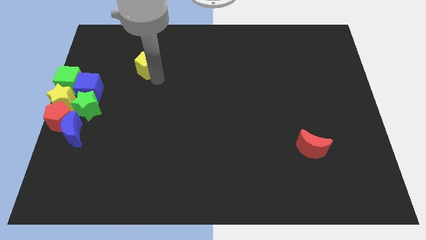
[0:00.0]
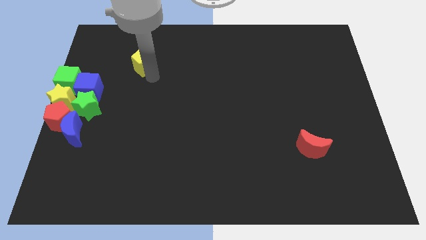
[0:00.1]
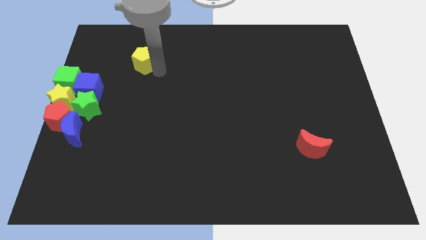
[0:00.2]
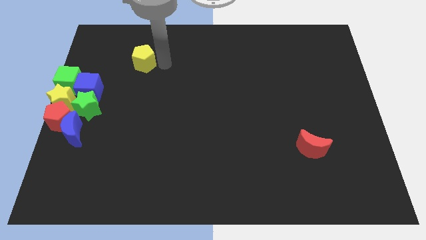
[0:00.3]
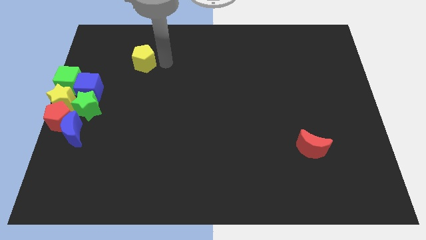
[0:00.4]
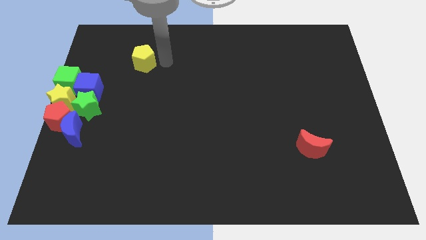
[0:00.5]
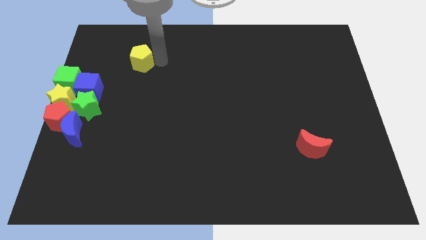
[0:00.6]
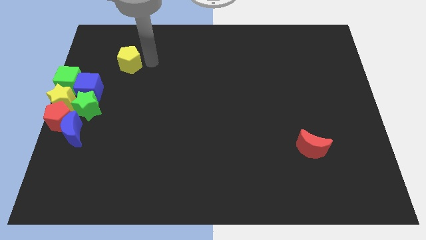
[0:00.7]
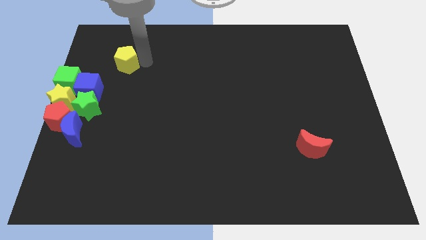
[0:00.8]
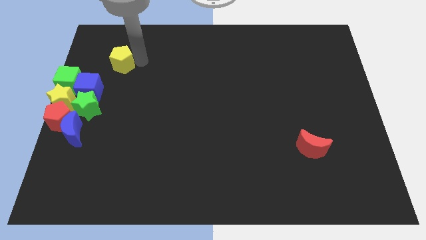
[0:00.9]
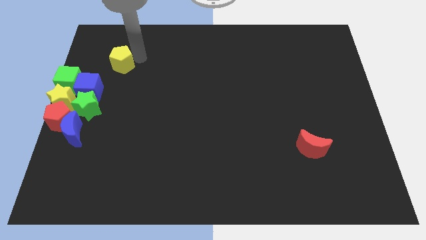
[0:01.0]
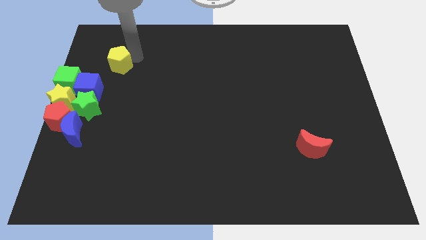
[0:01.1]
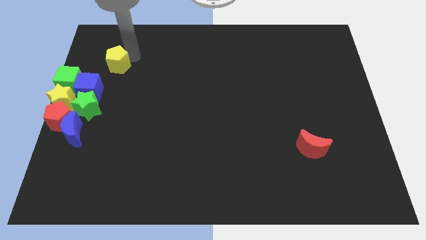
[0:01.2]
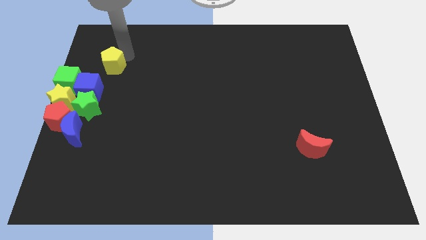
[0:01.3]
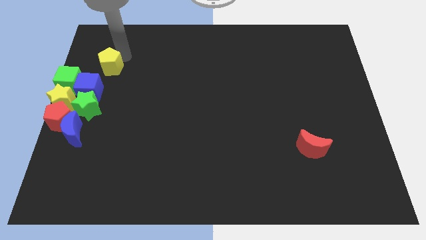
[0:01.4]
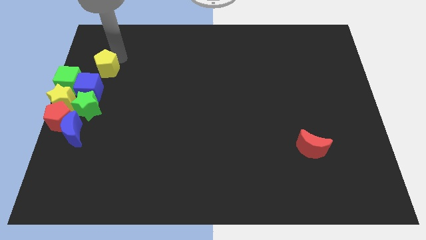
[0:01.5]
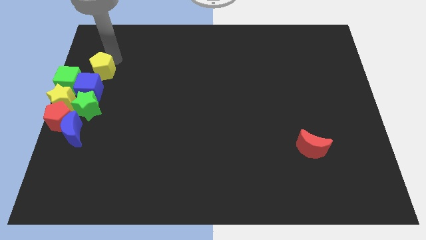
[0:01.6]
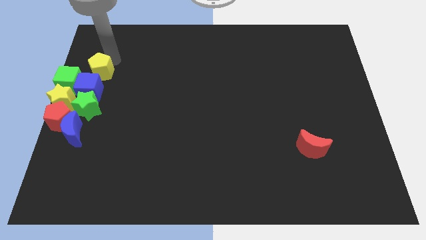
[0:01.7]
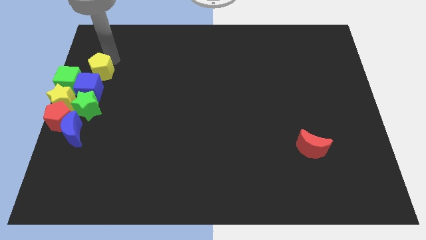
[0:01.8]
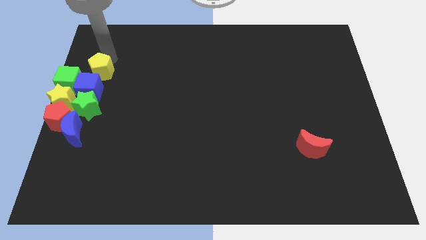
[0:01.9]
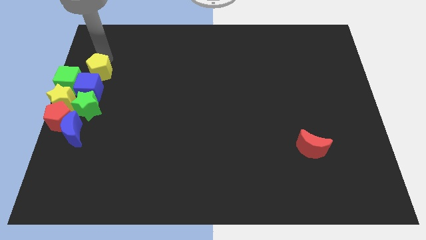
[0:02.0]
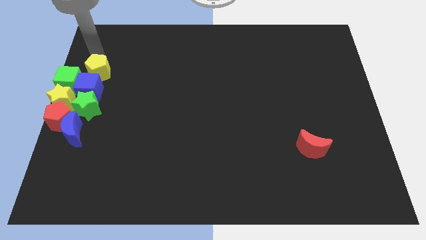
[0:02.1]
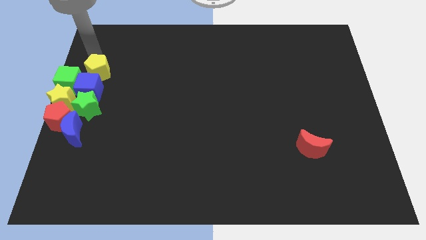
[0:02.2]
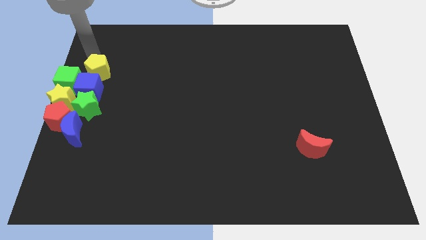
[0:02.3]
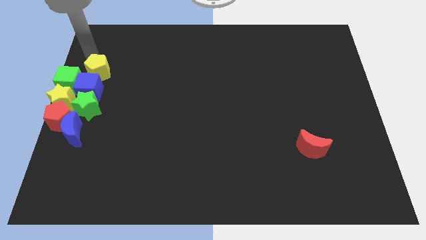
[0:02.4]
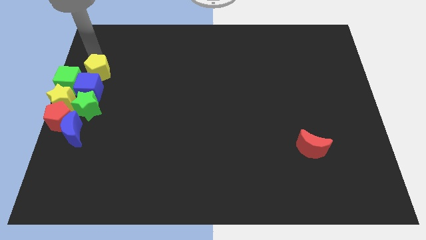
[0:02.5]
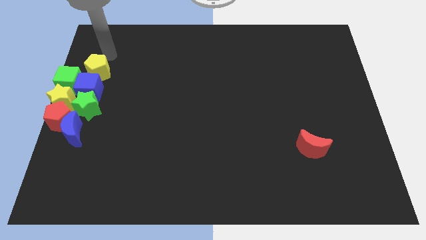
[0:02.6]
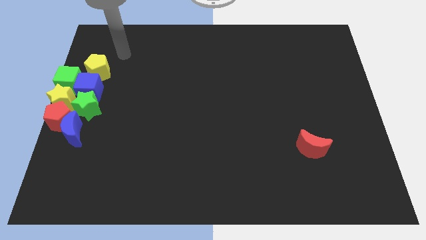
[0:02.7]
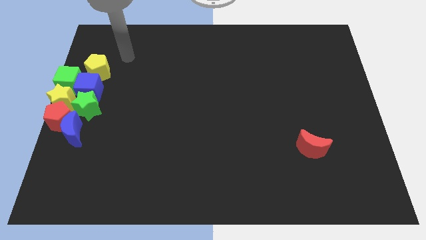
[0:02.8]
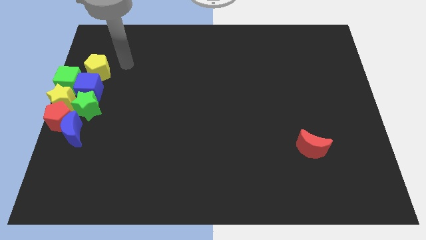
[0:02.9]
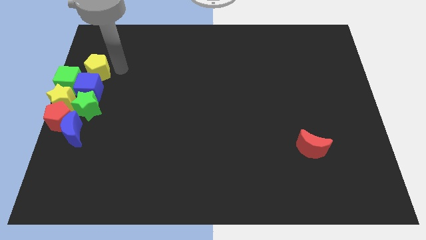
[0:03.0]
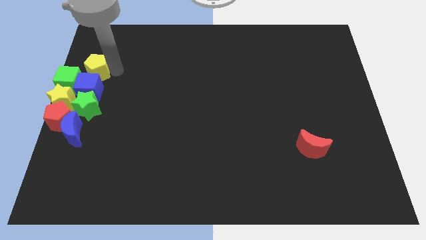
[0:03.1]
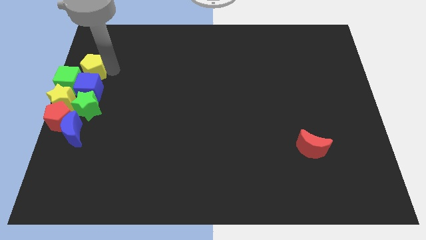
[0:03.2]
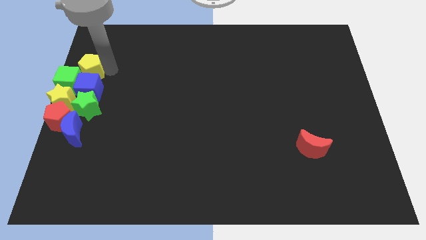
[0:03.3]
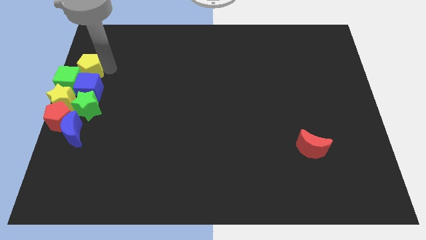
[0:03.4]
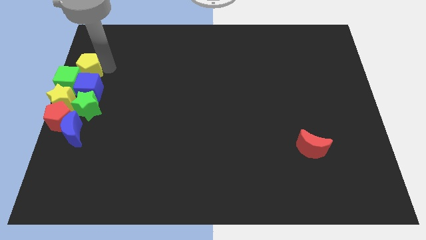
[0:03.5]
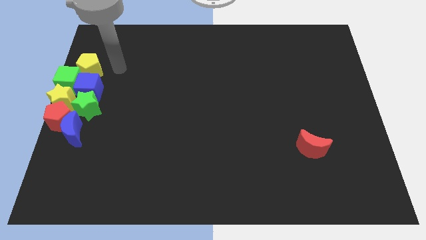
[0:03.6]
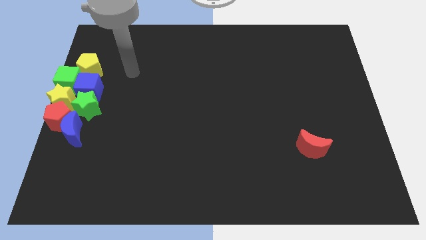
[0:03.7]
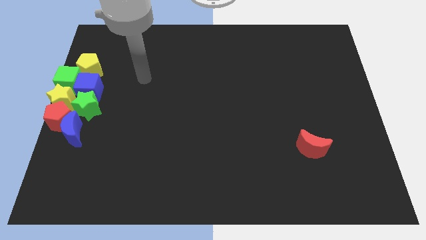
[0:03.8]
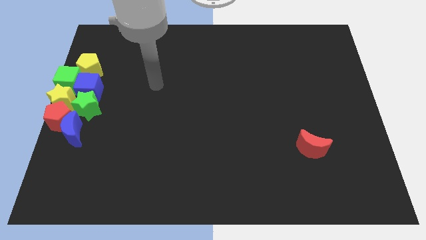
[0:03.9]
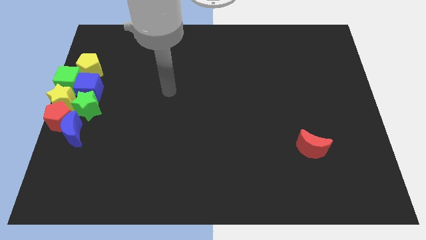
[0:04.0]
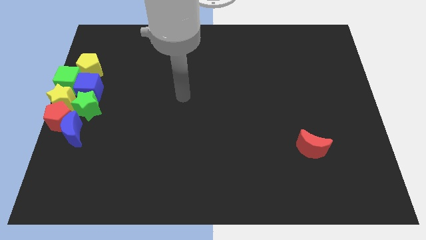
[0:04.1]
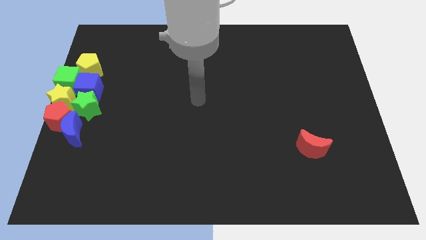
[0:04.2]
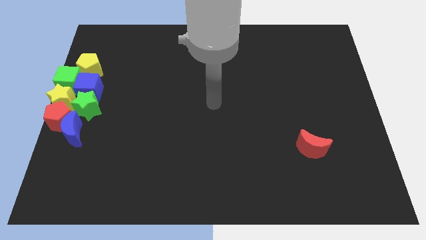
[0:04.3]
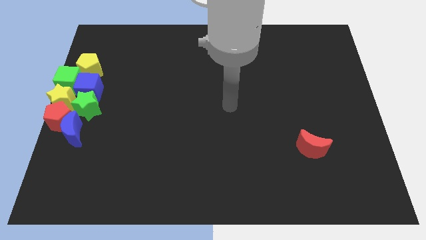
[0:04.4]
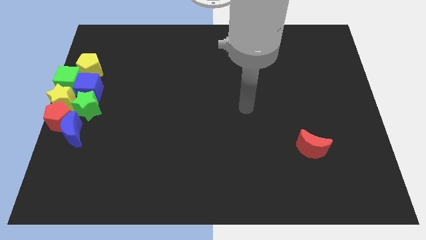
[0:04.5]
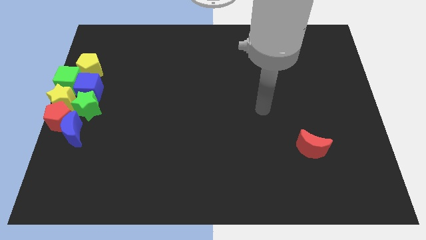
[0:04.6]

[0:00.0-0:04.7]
place the yellow pentagon on top of the blue cube to form a vertical line

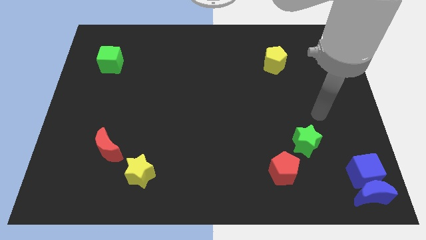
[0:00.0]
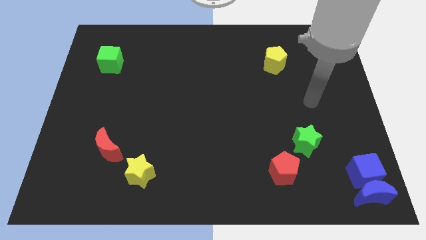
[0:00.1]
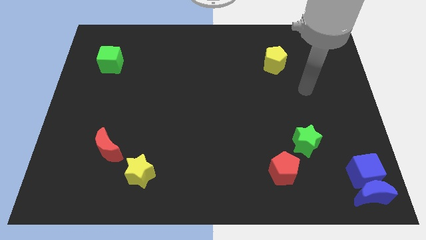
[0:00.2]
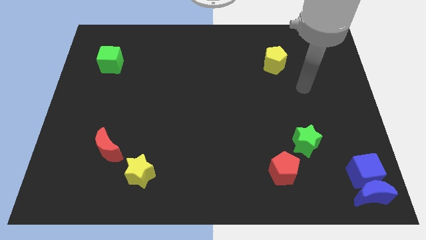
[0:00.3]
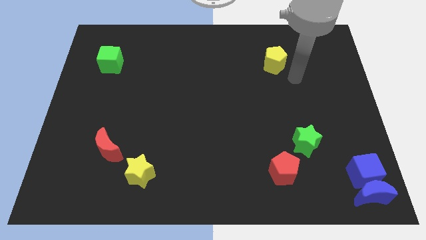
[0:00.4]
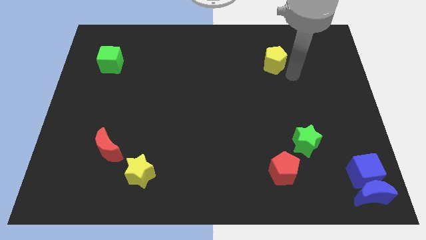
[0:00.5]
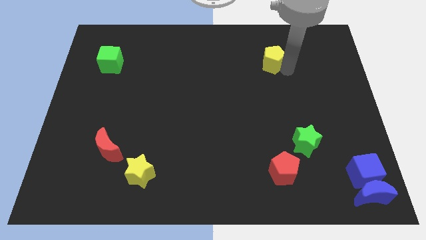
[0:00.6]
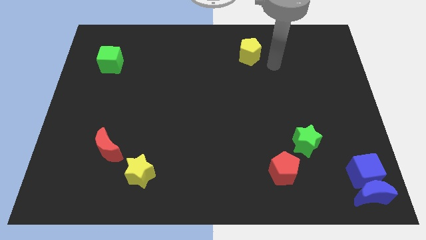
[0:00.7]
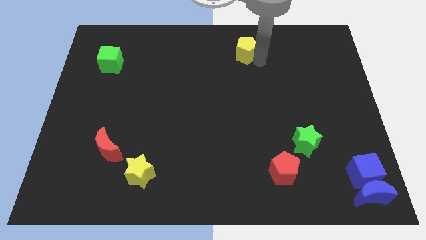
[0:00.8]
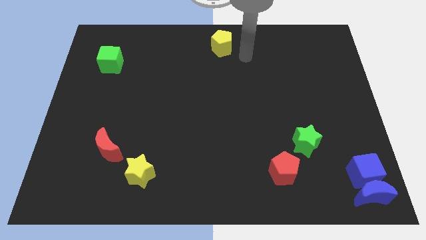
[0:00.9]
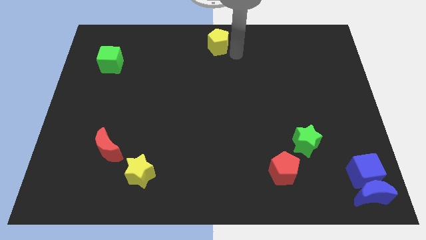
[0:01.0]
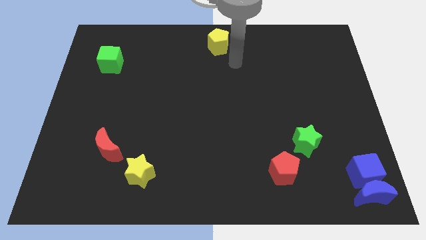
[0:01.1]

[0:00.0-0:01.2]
push yellow pentagon towards top middle of the board

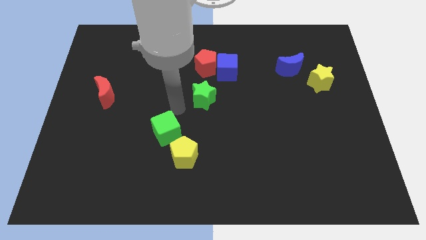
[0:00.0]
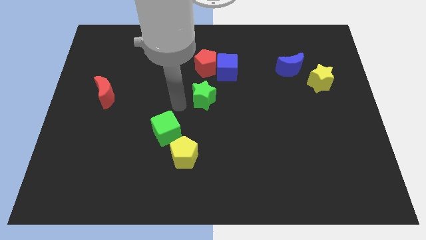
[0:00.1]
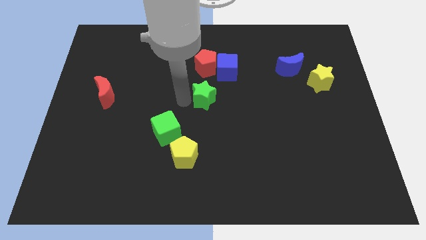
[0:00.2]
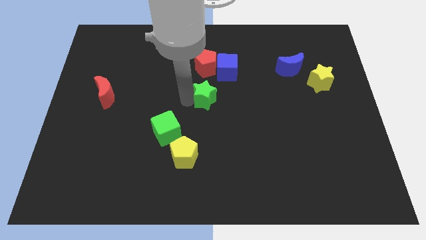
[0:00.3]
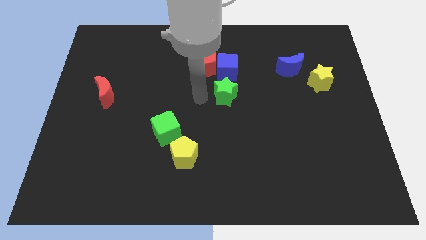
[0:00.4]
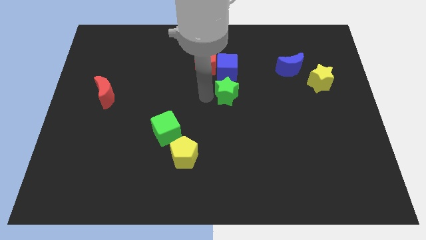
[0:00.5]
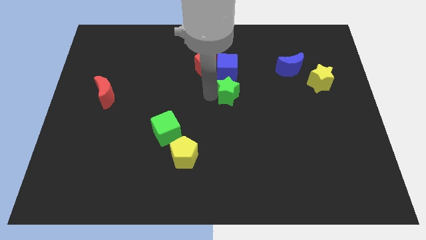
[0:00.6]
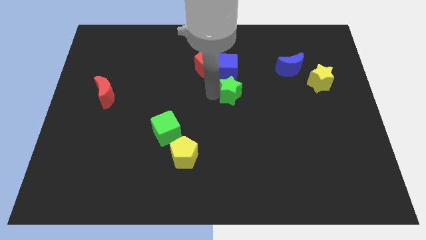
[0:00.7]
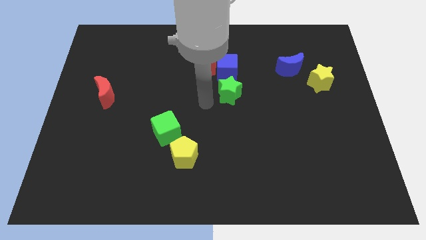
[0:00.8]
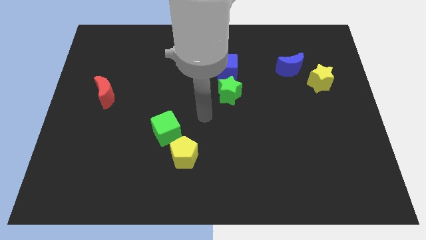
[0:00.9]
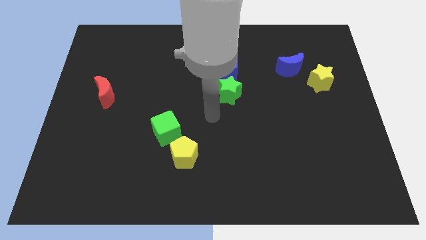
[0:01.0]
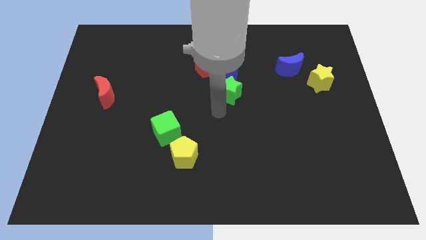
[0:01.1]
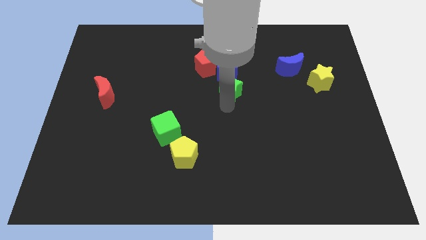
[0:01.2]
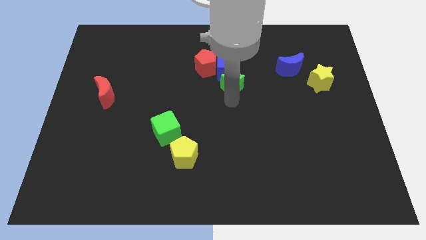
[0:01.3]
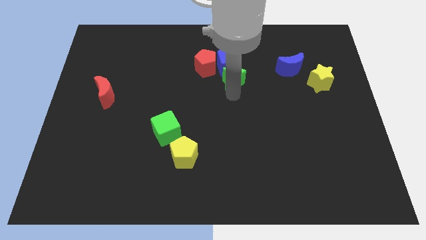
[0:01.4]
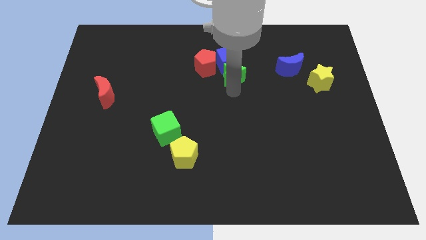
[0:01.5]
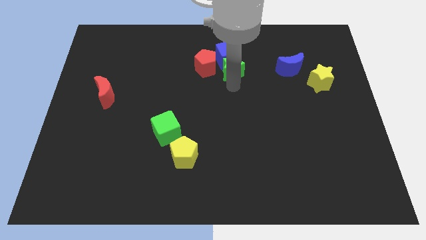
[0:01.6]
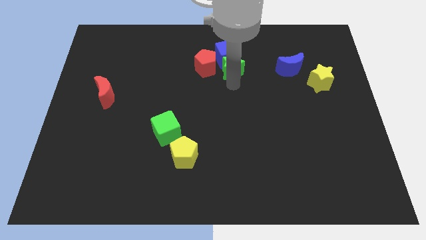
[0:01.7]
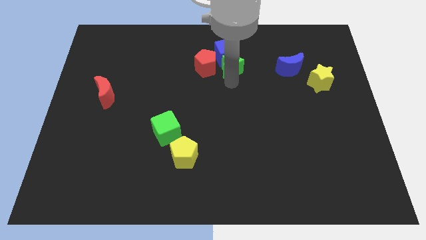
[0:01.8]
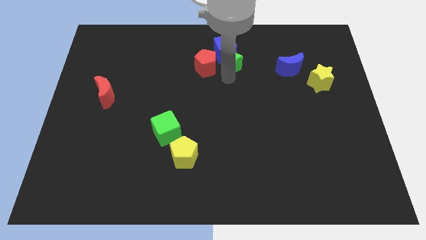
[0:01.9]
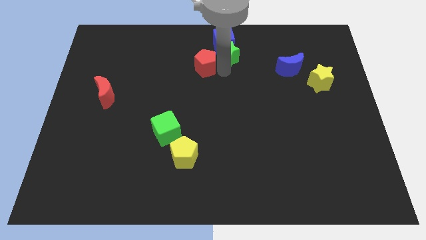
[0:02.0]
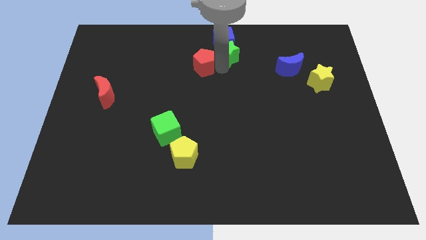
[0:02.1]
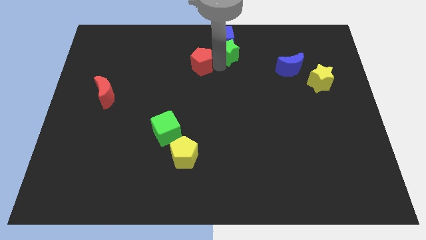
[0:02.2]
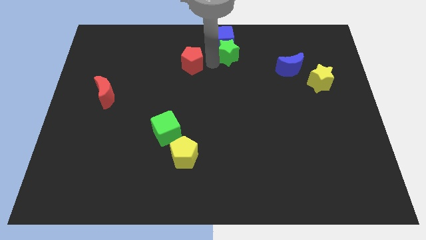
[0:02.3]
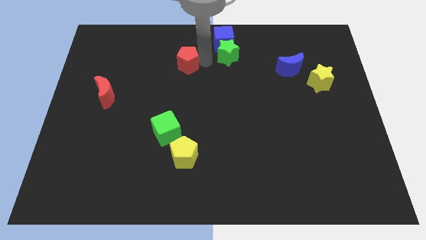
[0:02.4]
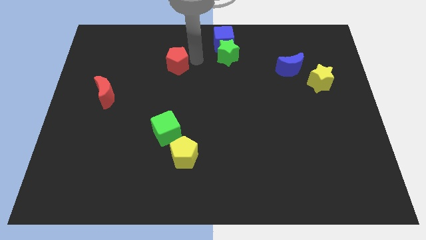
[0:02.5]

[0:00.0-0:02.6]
move the green star below the blue cube

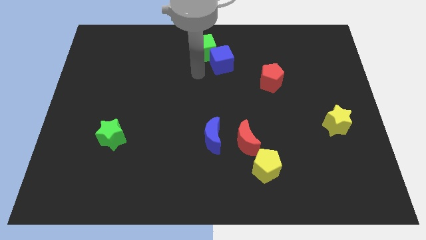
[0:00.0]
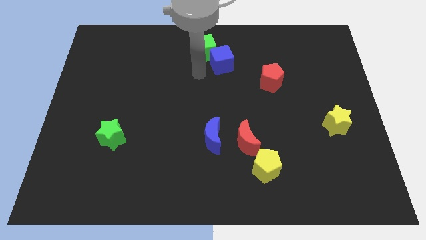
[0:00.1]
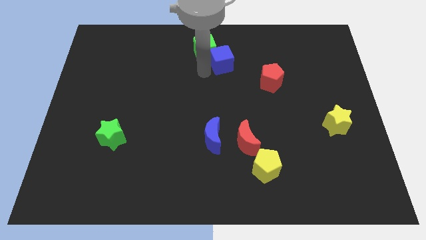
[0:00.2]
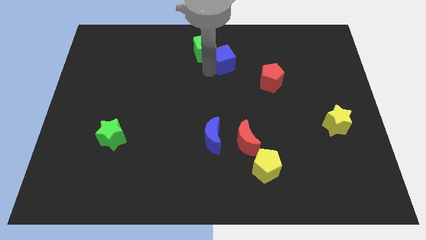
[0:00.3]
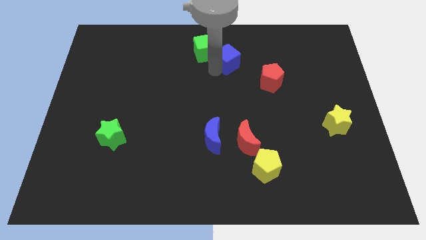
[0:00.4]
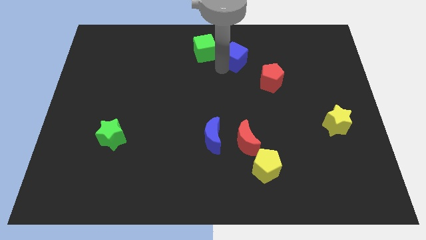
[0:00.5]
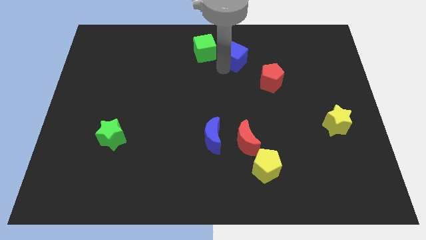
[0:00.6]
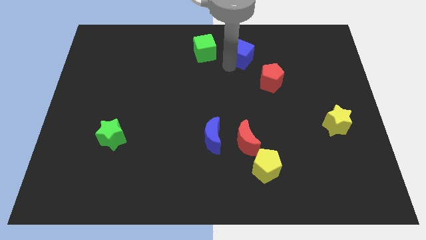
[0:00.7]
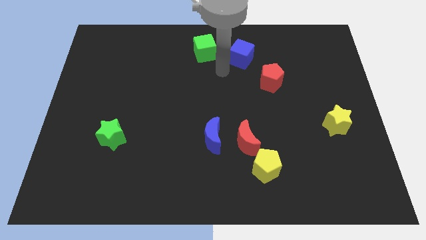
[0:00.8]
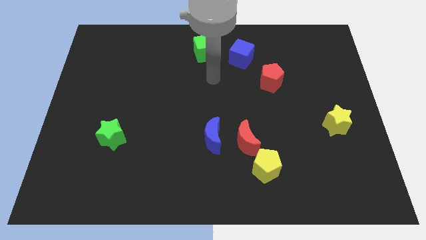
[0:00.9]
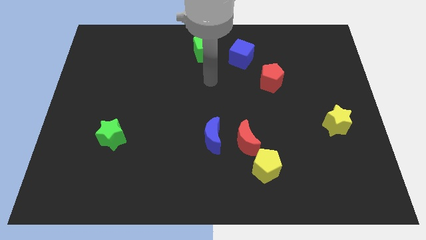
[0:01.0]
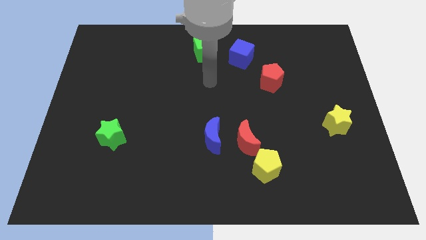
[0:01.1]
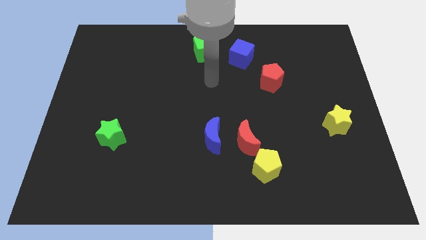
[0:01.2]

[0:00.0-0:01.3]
separate the blue cube from the green cube
